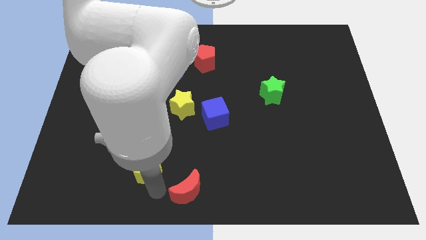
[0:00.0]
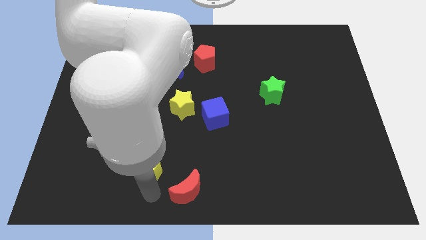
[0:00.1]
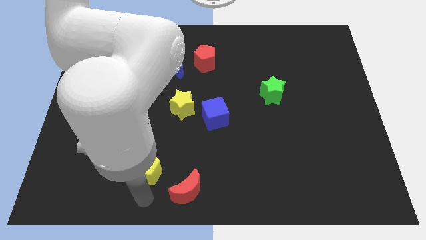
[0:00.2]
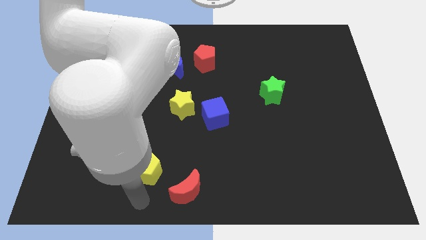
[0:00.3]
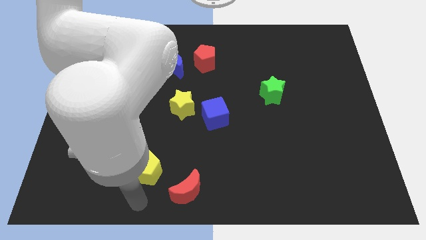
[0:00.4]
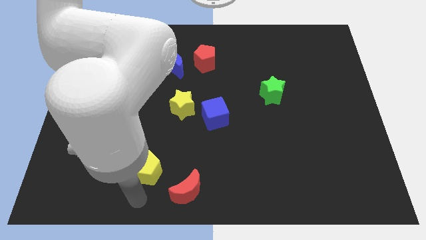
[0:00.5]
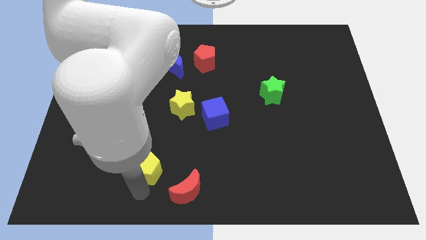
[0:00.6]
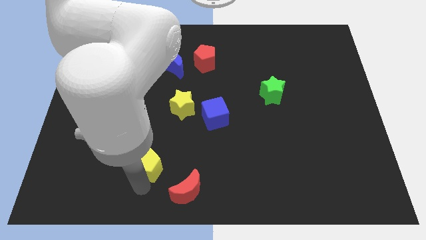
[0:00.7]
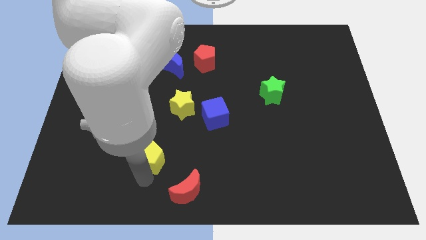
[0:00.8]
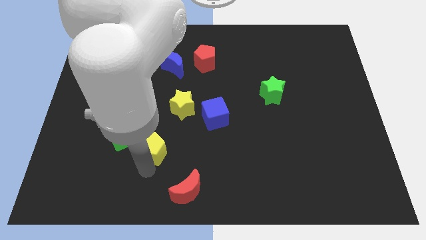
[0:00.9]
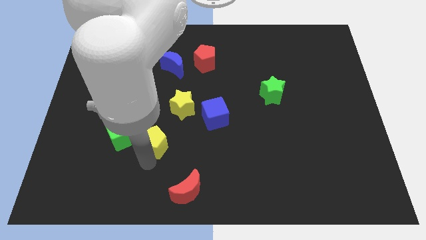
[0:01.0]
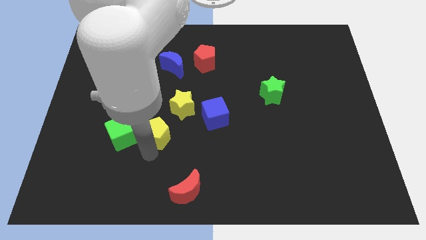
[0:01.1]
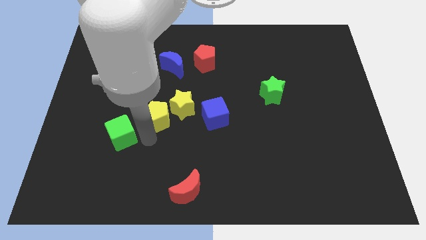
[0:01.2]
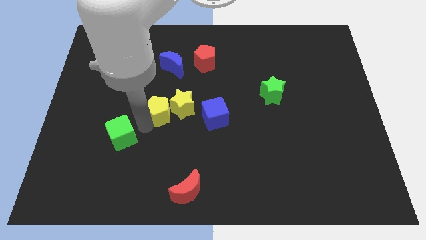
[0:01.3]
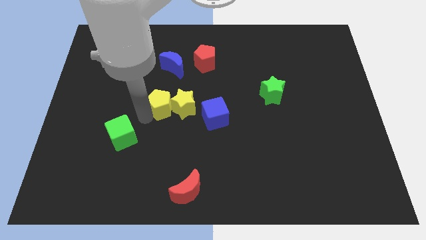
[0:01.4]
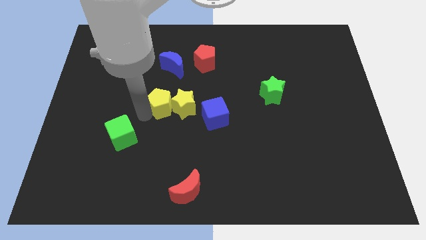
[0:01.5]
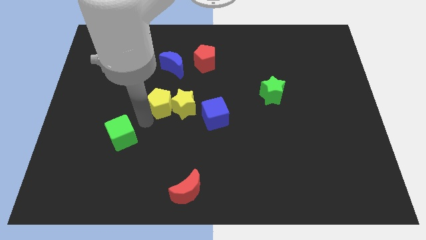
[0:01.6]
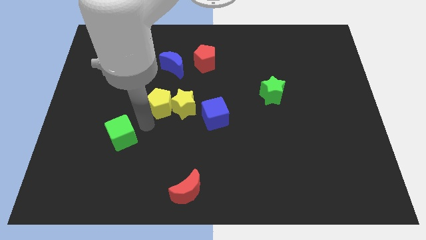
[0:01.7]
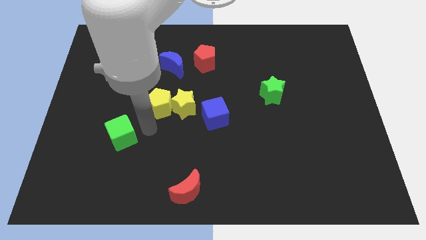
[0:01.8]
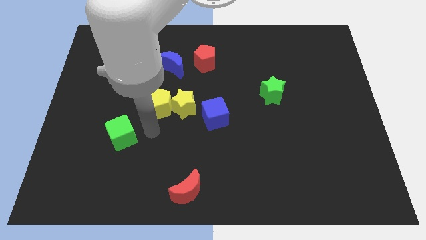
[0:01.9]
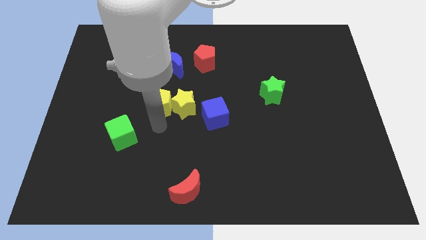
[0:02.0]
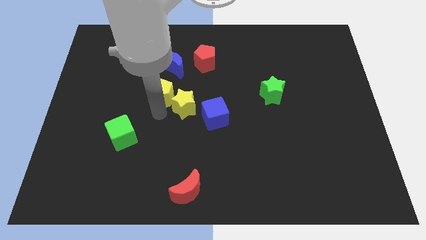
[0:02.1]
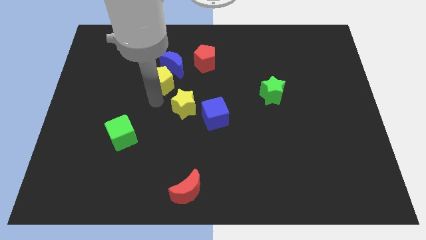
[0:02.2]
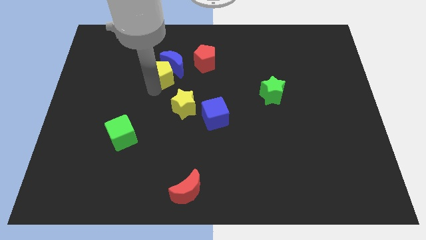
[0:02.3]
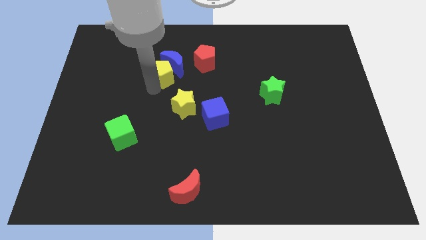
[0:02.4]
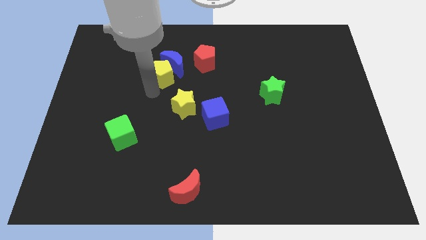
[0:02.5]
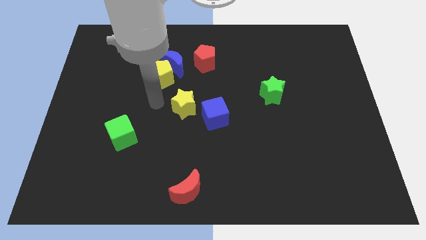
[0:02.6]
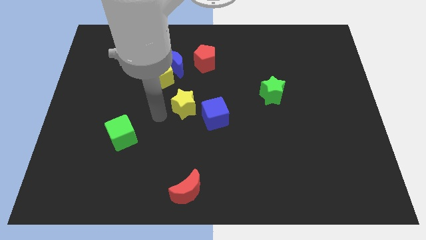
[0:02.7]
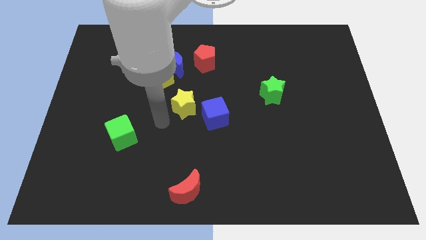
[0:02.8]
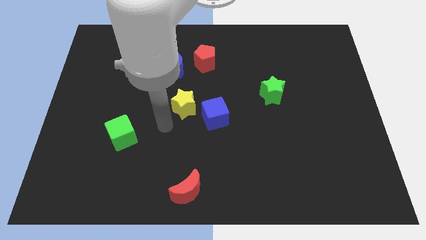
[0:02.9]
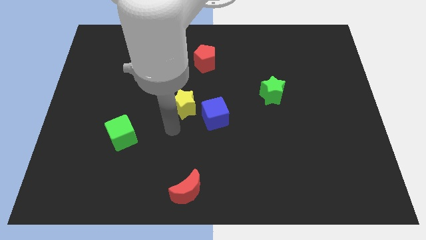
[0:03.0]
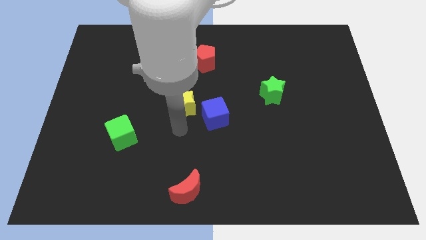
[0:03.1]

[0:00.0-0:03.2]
move yellow pentagon into blue moon

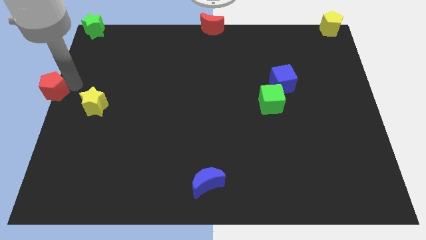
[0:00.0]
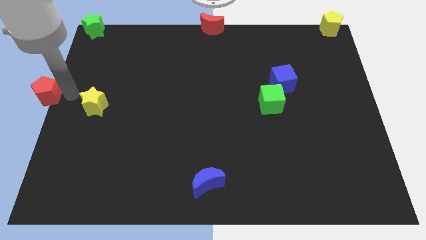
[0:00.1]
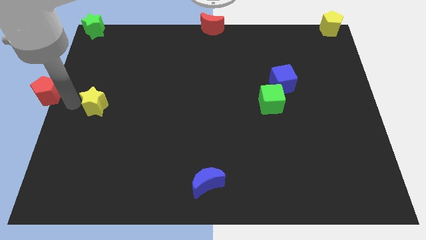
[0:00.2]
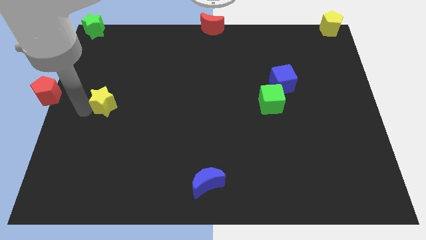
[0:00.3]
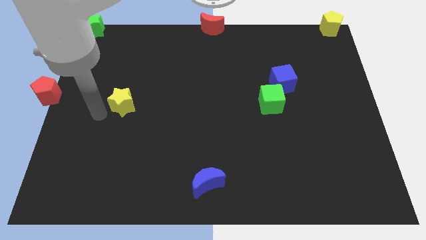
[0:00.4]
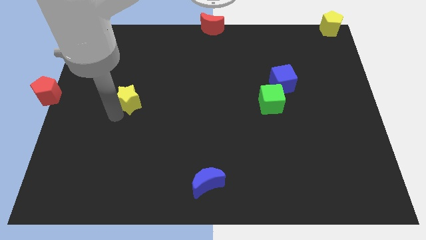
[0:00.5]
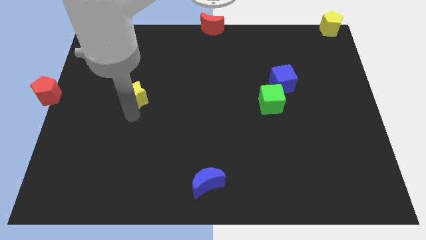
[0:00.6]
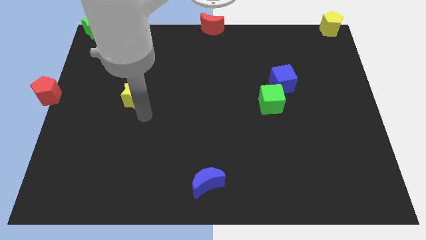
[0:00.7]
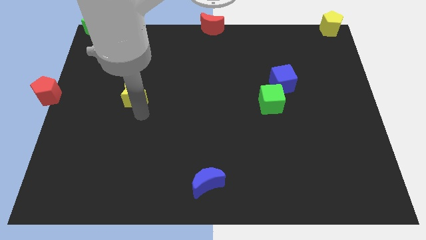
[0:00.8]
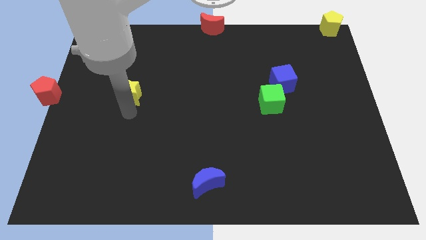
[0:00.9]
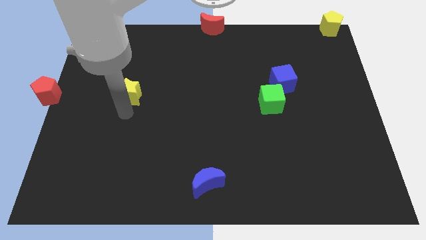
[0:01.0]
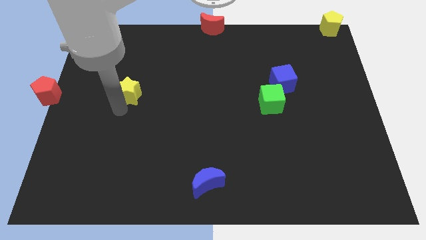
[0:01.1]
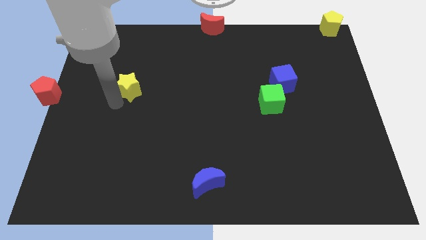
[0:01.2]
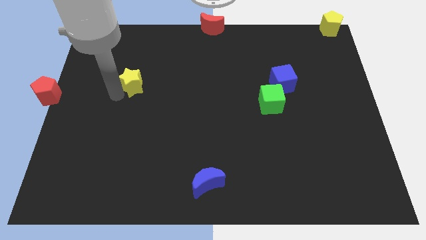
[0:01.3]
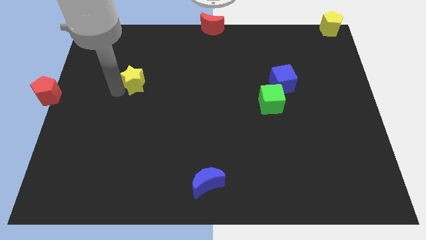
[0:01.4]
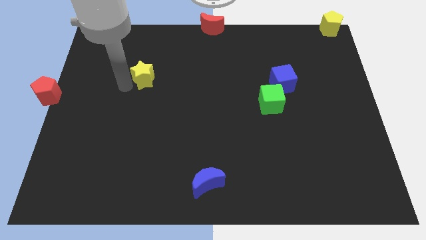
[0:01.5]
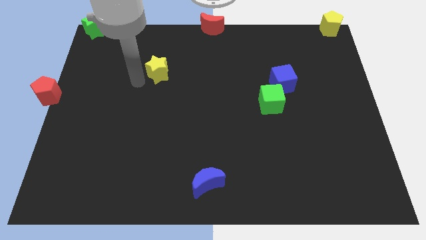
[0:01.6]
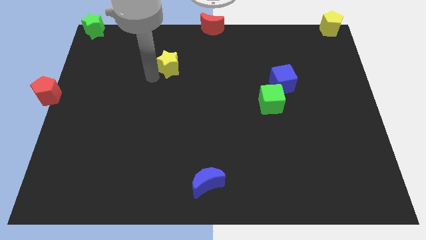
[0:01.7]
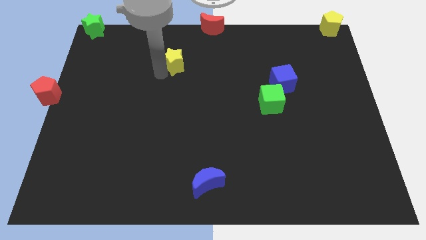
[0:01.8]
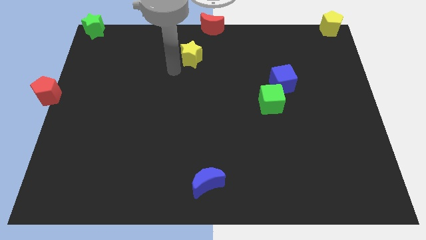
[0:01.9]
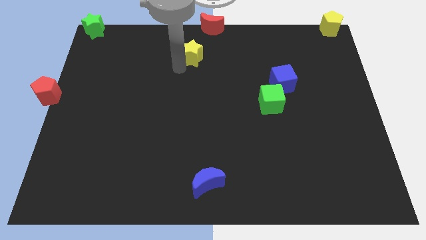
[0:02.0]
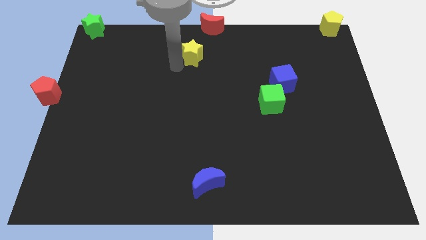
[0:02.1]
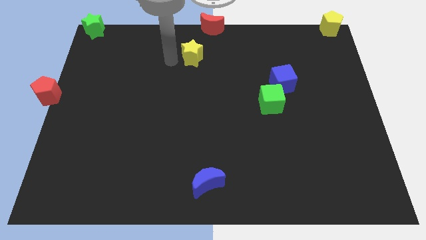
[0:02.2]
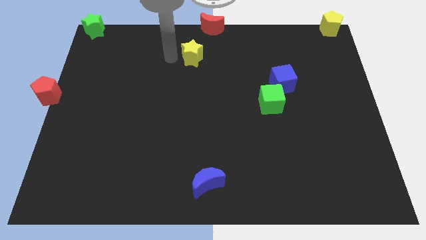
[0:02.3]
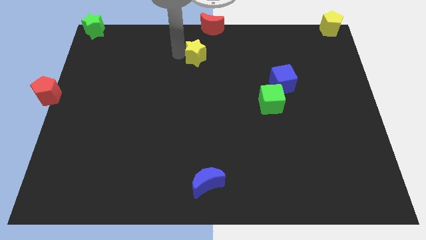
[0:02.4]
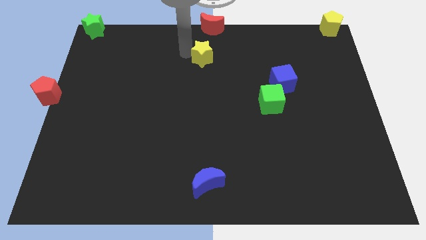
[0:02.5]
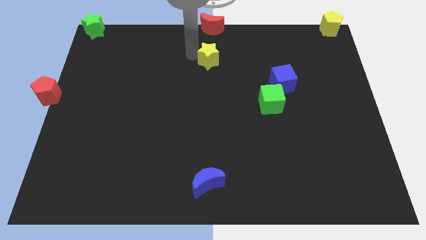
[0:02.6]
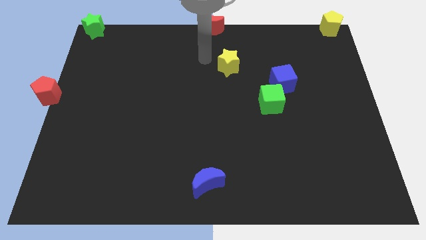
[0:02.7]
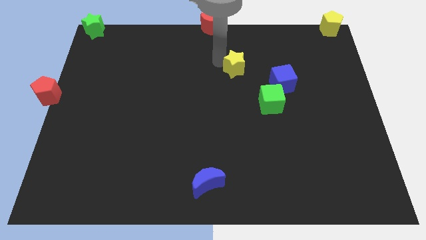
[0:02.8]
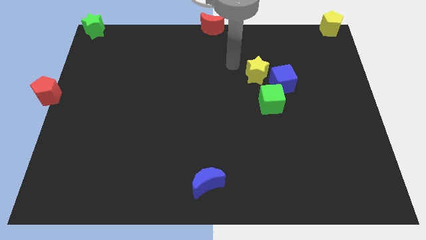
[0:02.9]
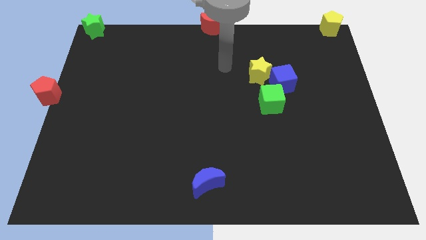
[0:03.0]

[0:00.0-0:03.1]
push the yellow star close to the cubes

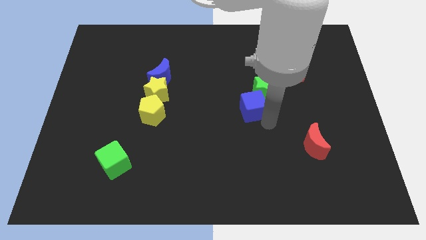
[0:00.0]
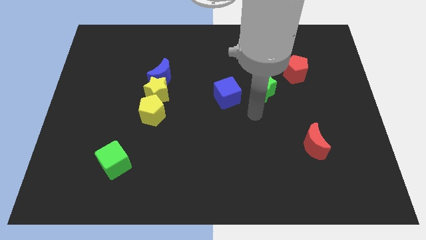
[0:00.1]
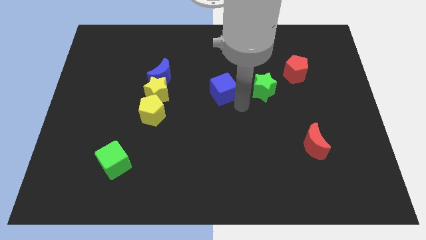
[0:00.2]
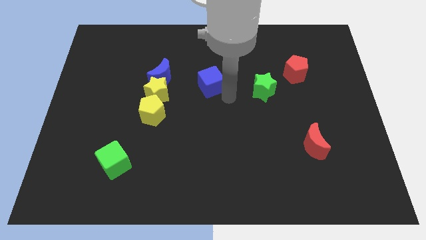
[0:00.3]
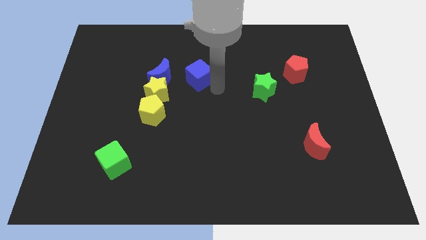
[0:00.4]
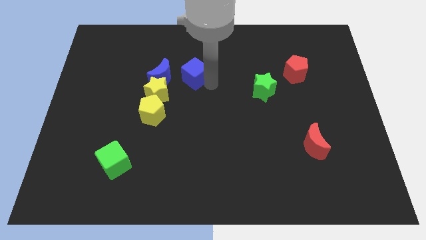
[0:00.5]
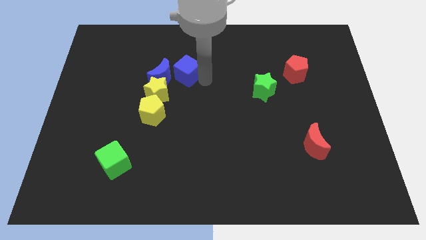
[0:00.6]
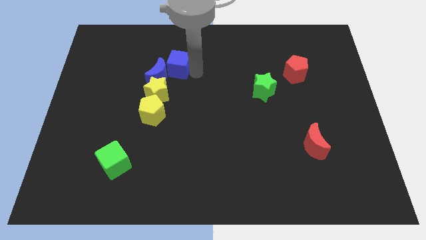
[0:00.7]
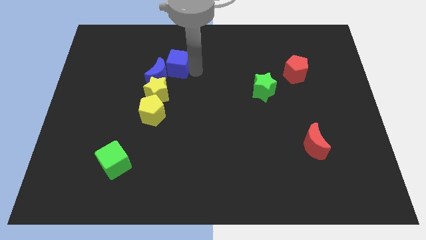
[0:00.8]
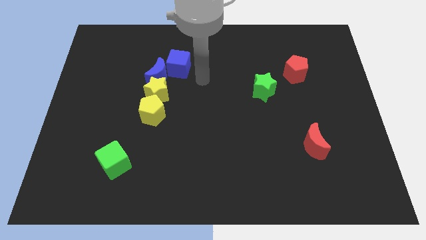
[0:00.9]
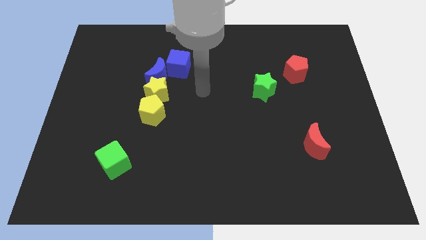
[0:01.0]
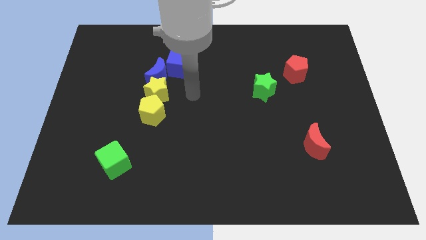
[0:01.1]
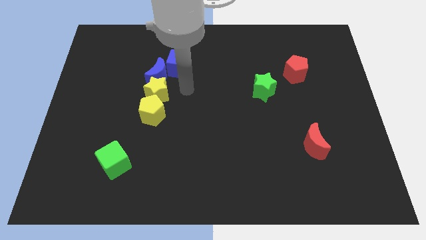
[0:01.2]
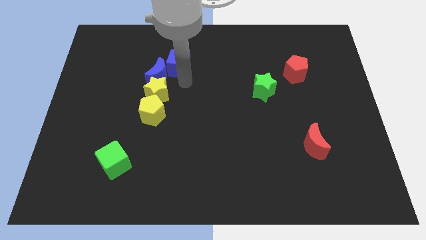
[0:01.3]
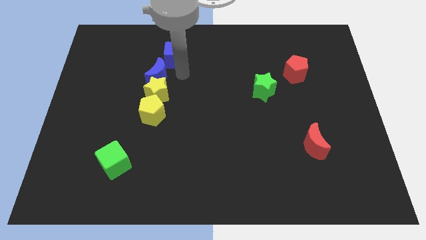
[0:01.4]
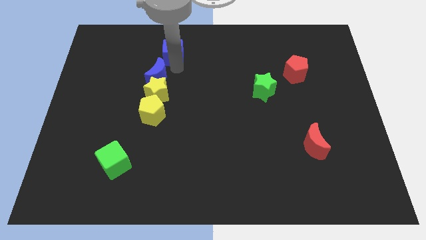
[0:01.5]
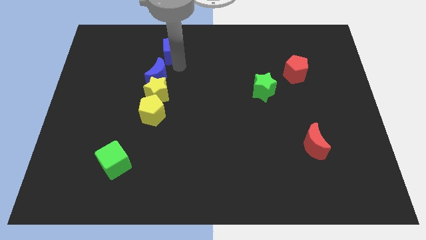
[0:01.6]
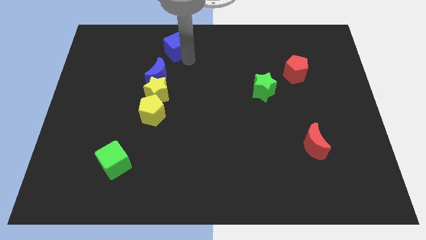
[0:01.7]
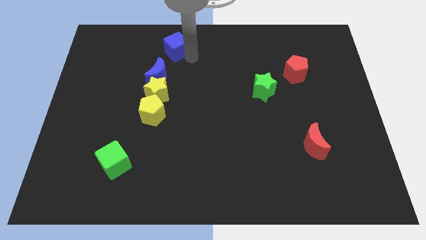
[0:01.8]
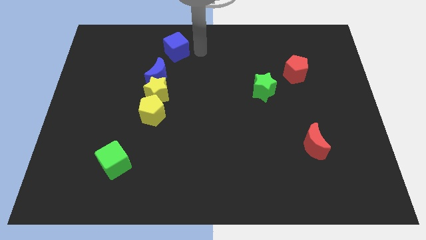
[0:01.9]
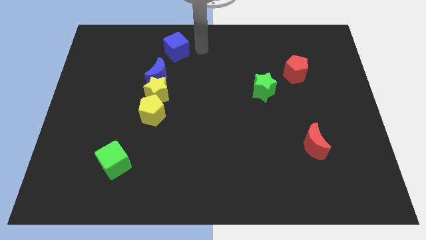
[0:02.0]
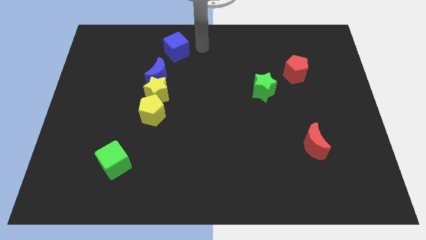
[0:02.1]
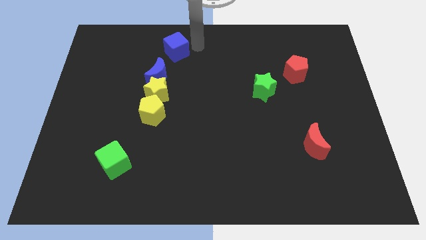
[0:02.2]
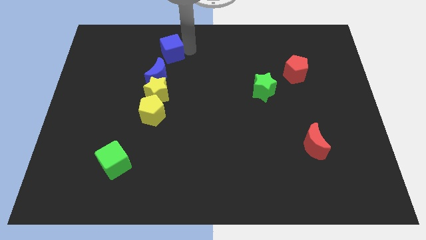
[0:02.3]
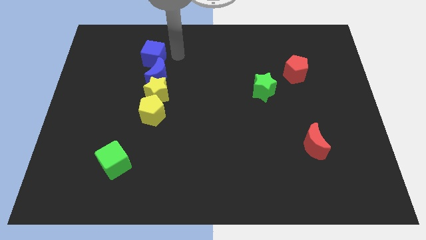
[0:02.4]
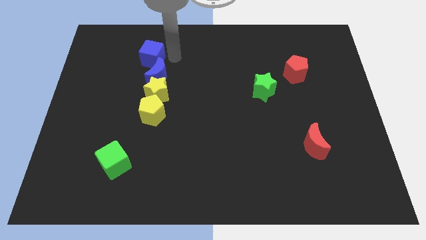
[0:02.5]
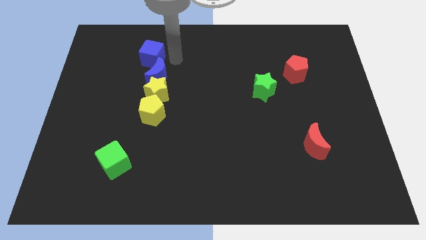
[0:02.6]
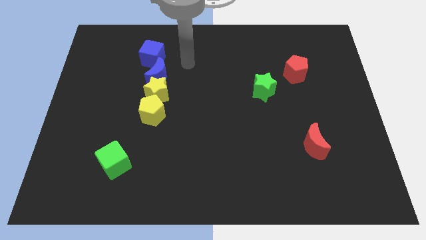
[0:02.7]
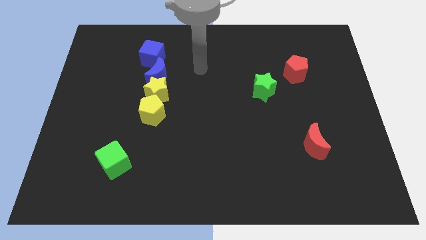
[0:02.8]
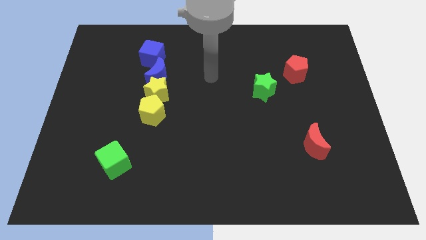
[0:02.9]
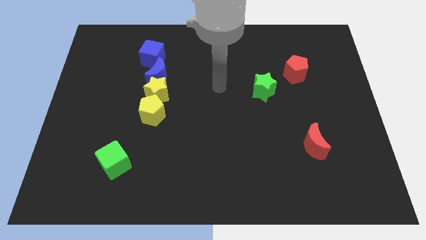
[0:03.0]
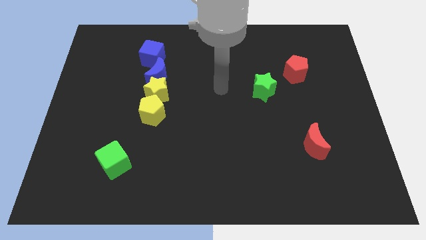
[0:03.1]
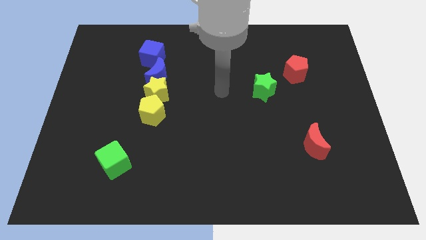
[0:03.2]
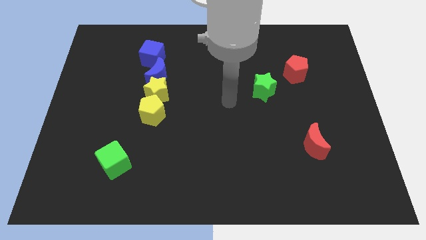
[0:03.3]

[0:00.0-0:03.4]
place the blue cube above the blue crescent
